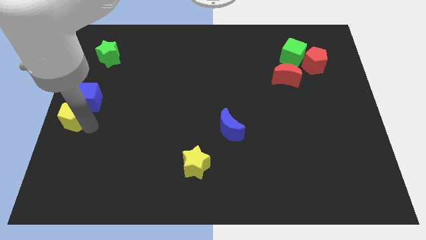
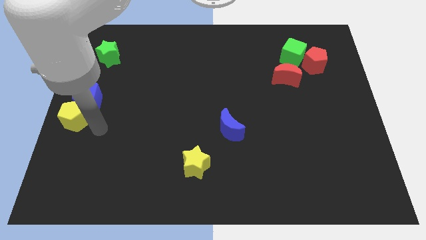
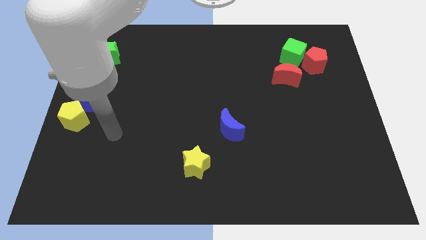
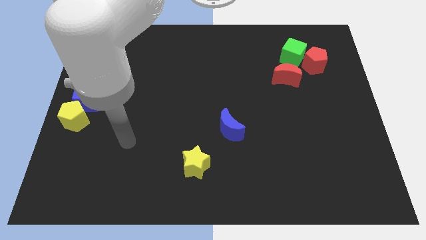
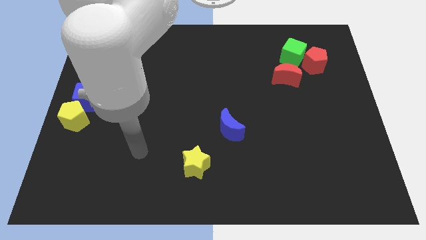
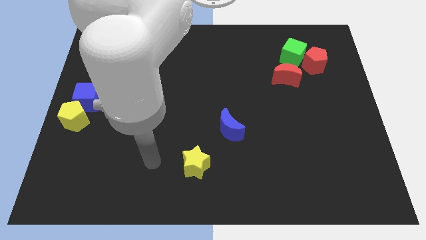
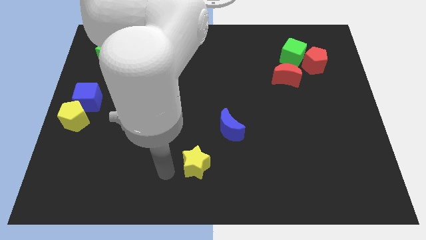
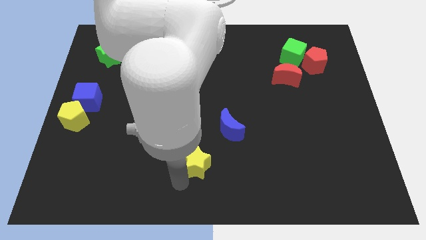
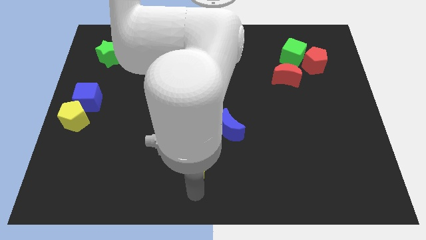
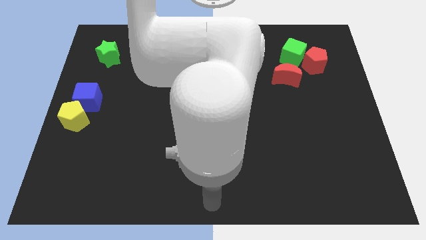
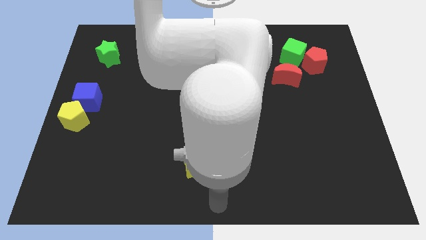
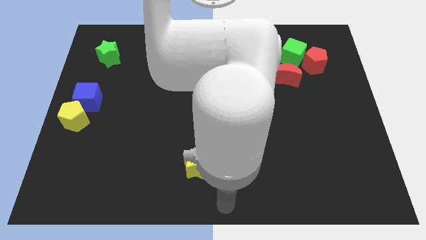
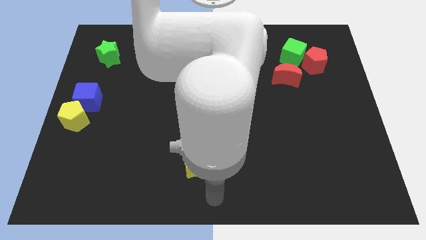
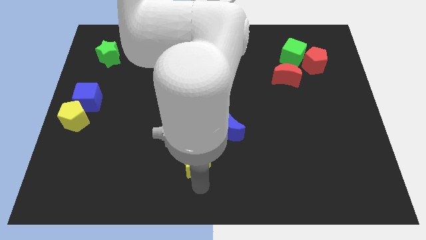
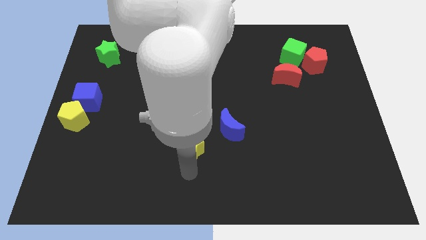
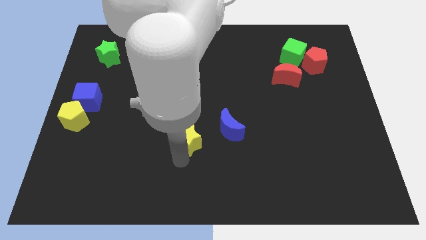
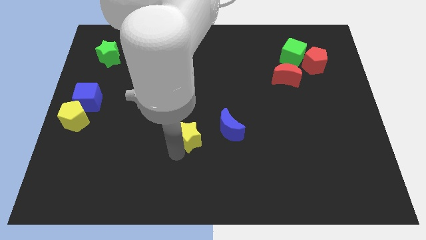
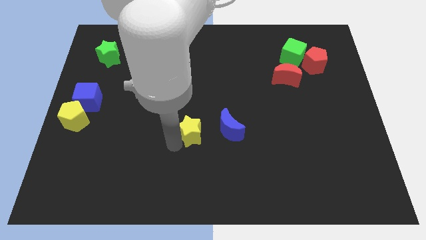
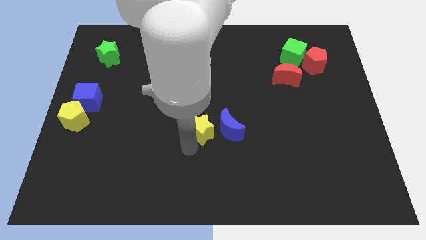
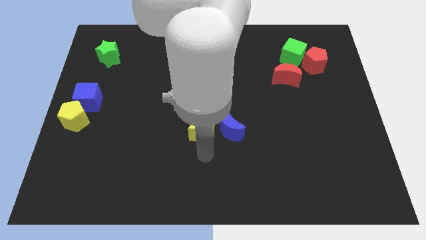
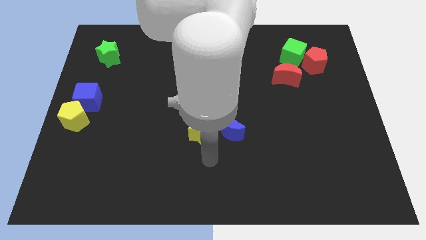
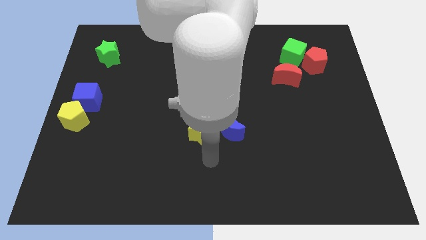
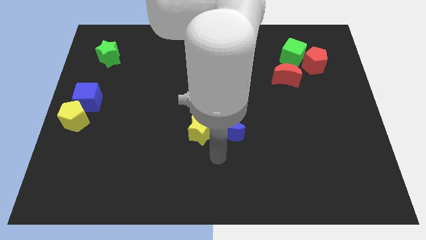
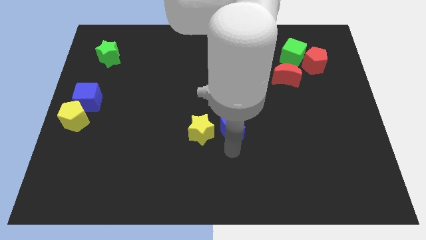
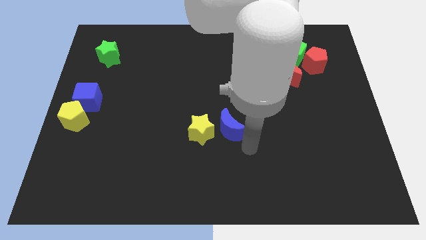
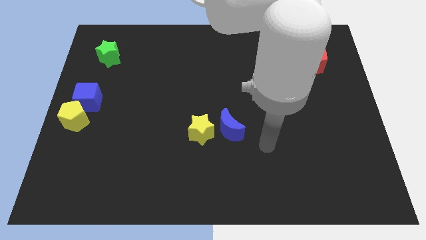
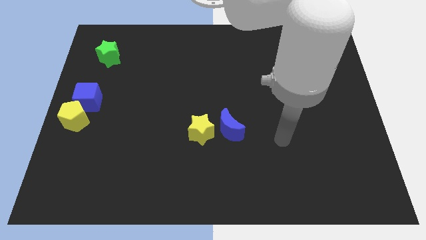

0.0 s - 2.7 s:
place the yellow star parallel to blue moon

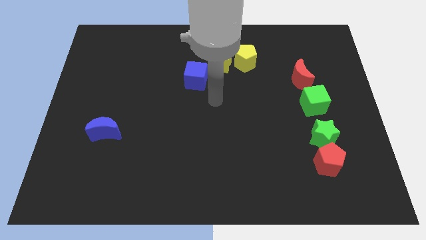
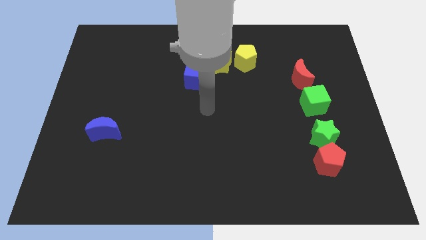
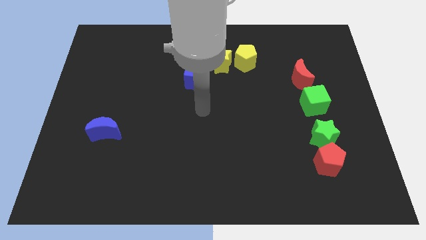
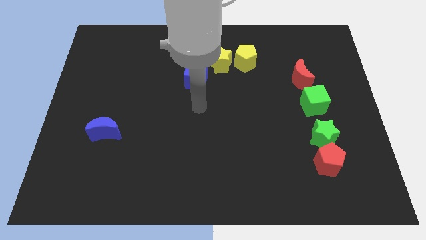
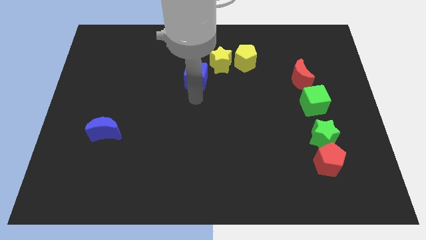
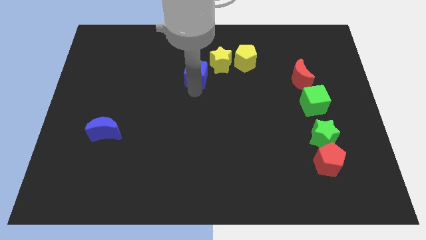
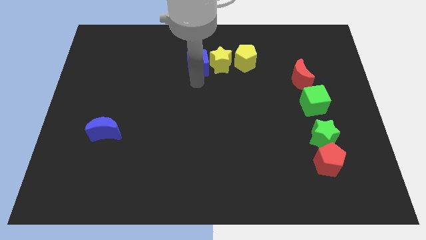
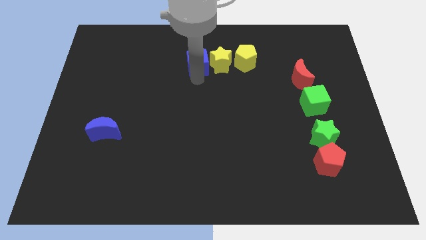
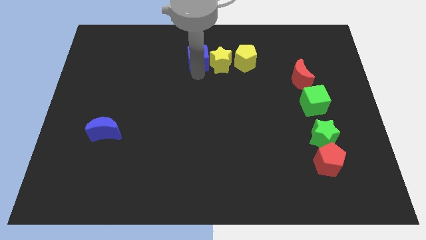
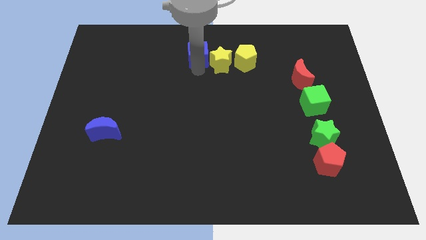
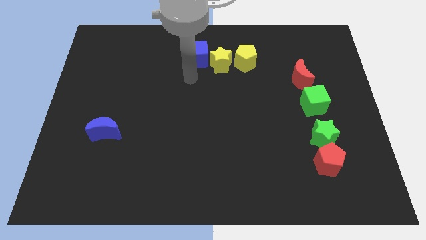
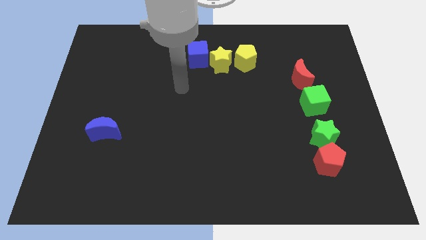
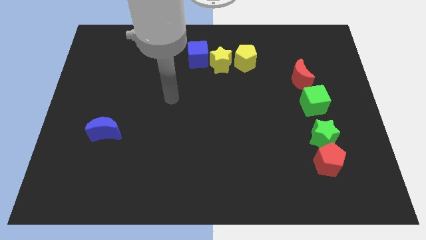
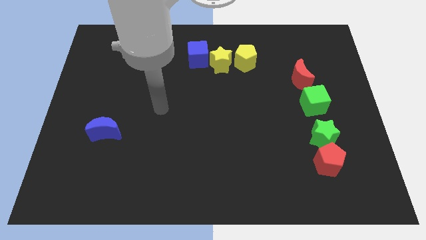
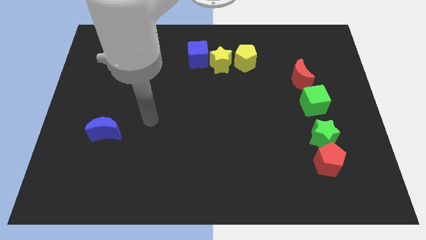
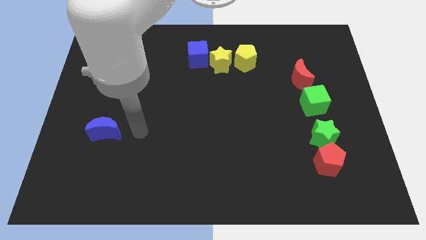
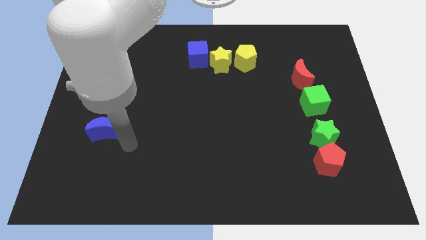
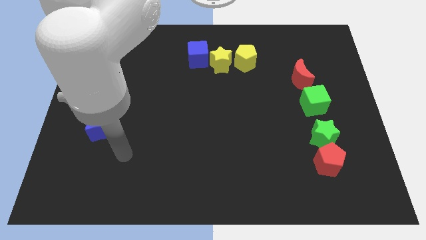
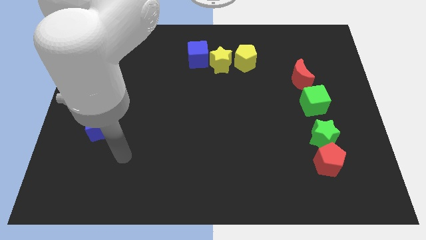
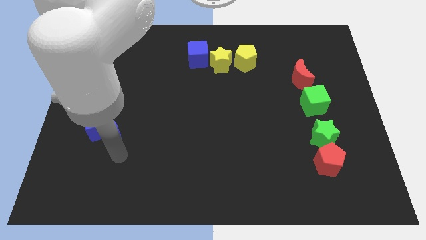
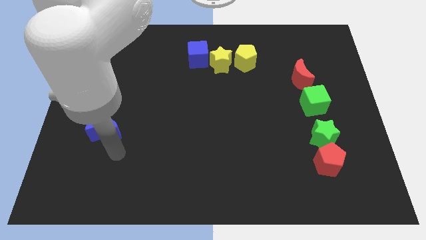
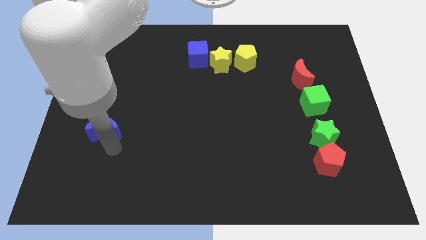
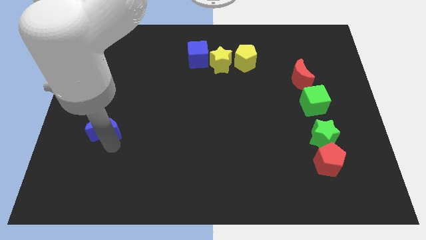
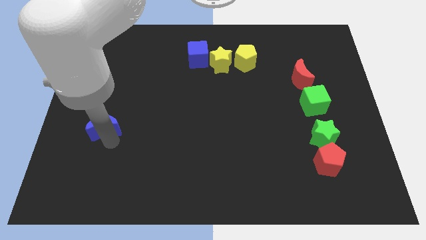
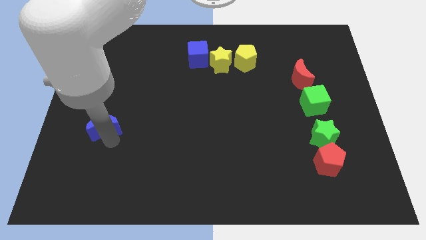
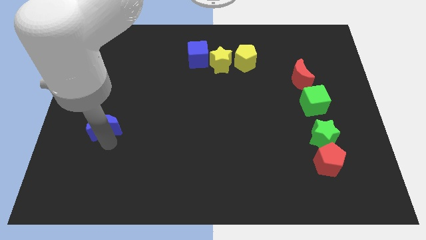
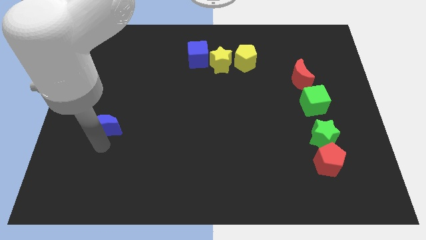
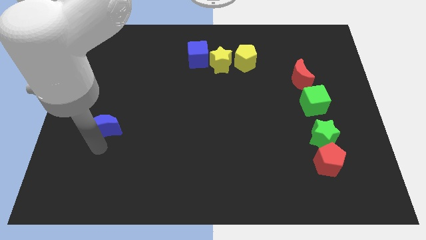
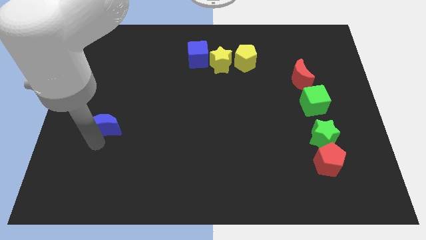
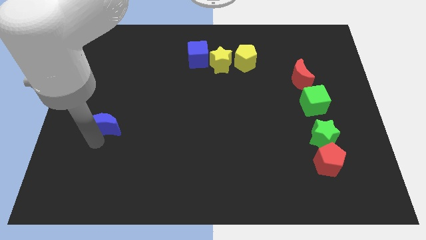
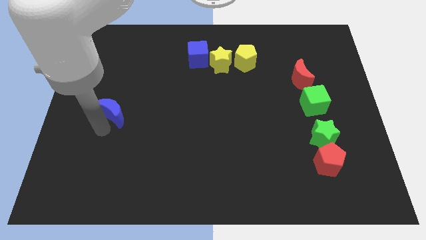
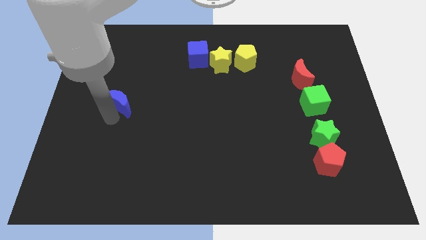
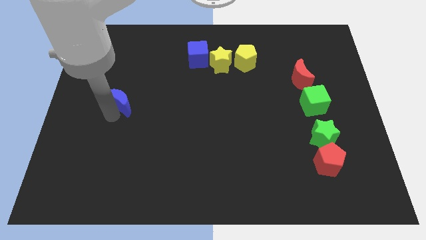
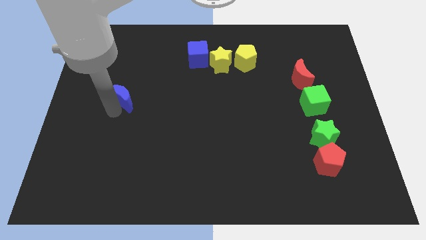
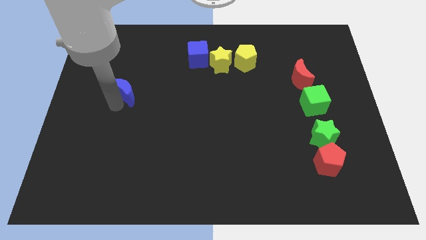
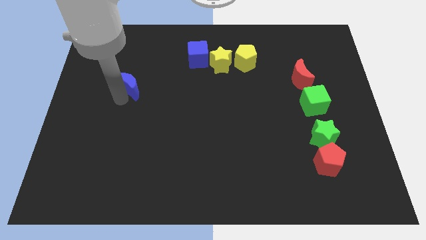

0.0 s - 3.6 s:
move blue blocks to the top of the board

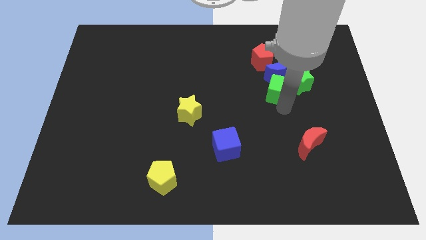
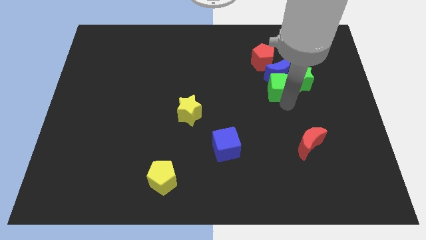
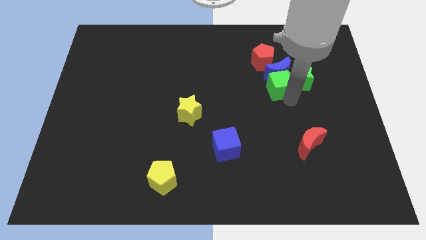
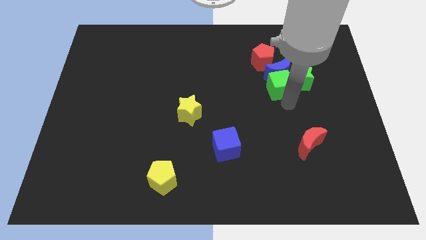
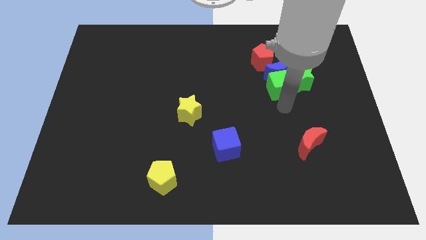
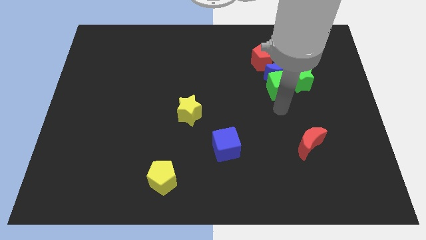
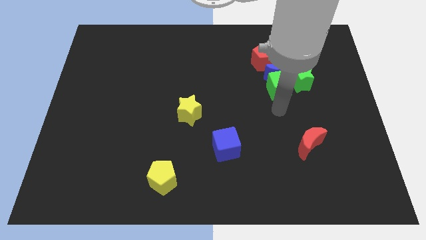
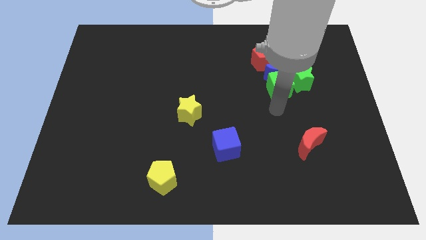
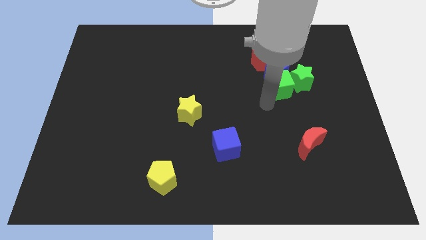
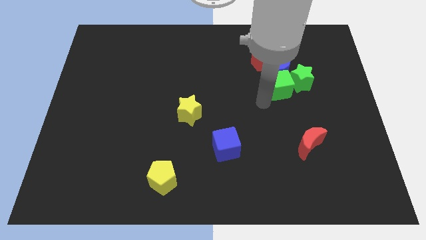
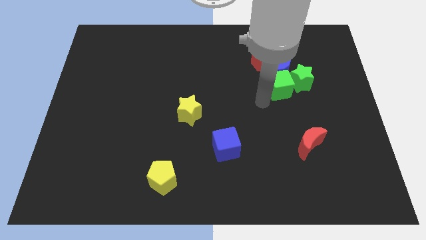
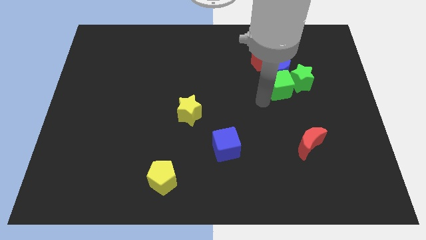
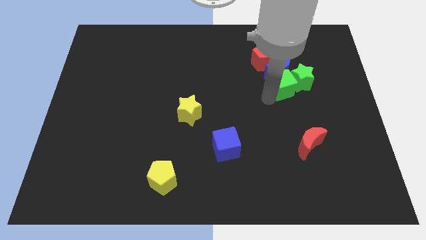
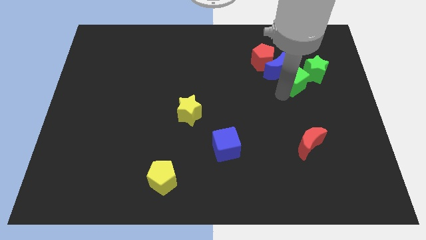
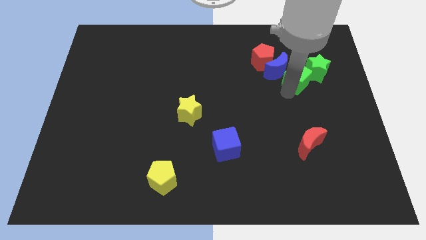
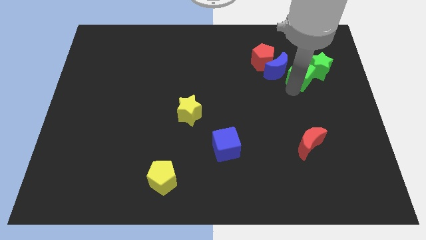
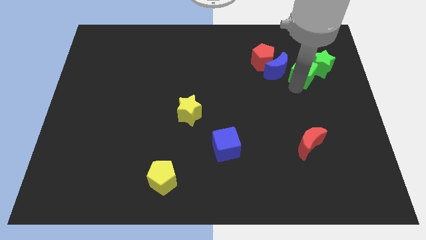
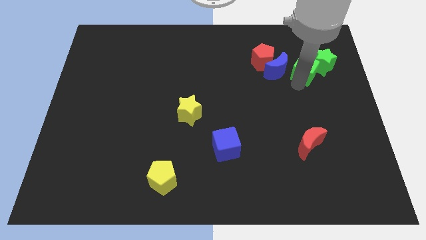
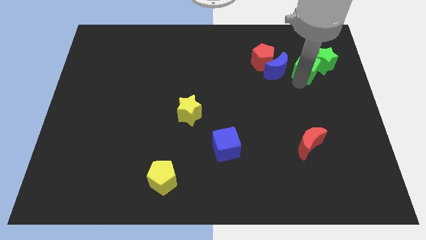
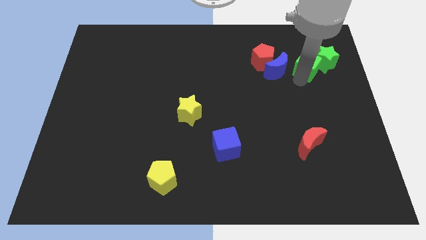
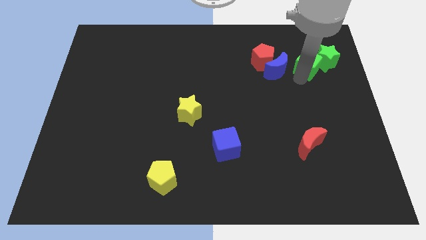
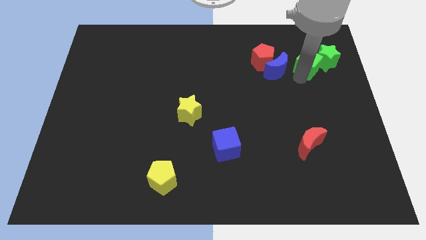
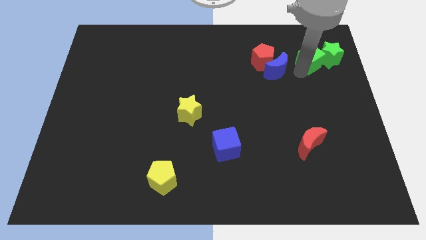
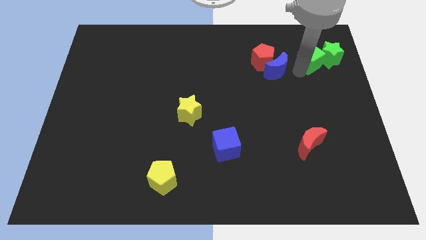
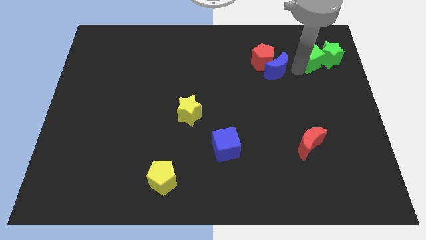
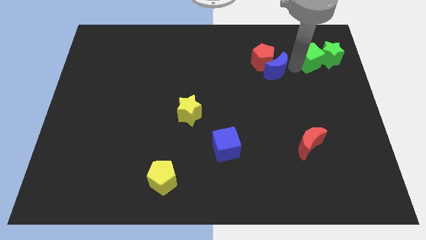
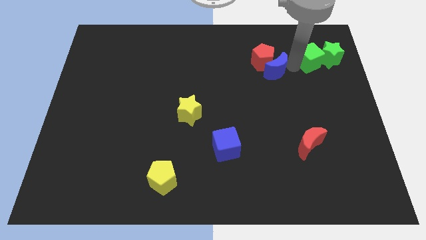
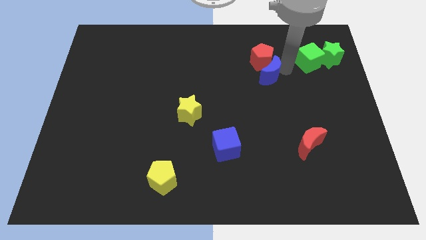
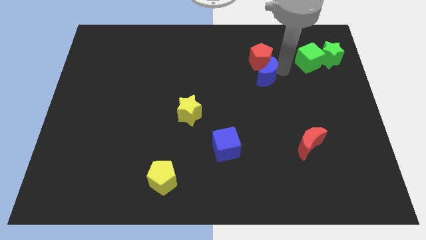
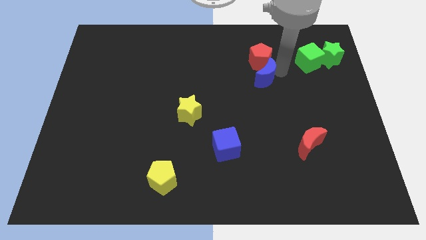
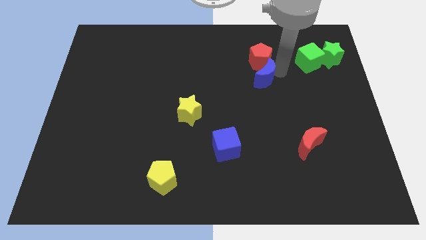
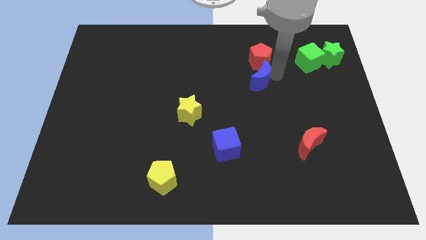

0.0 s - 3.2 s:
push the green blocks and blue moon in different directions
